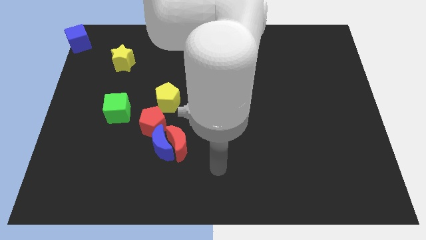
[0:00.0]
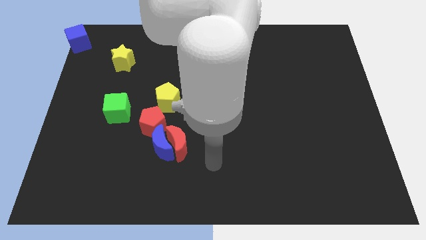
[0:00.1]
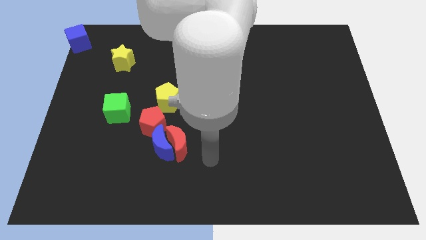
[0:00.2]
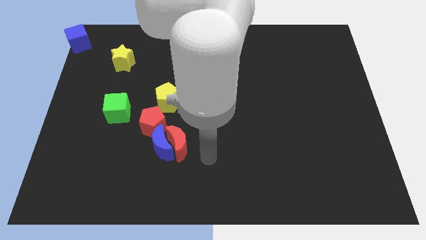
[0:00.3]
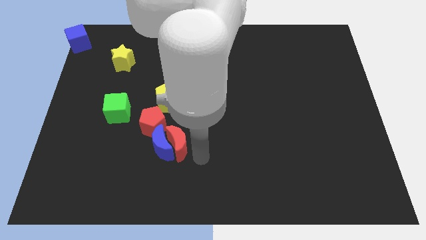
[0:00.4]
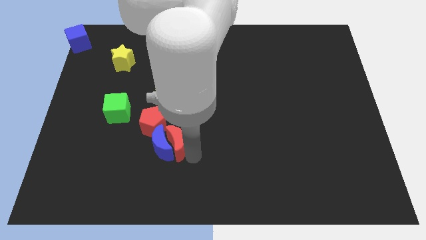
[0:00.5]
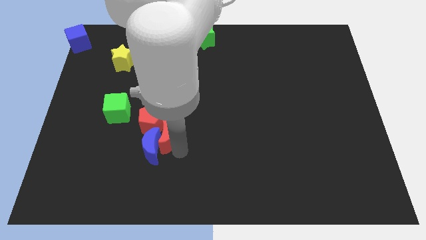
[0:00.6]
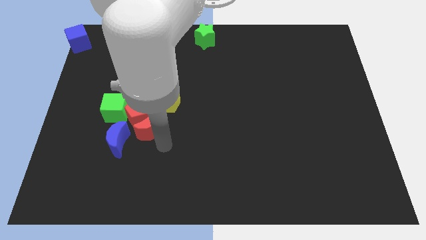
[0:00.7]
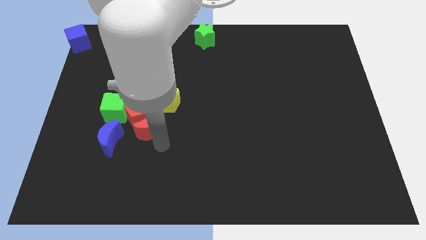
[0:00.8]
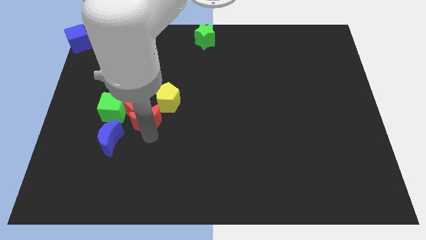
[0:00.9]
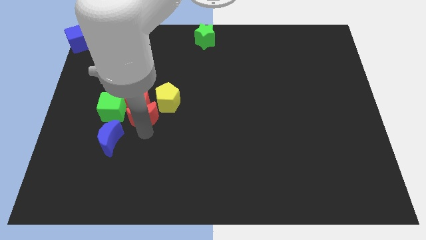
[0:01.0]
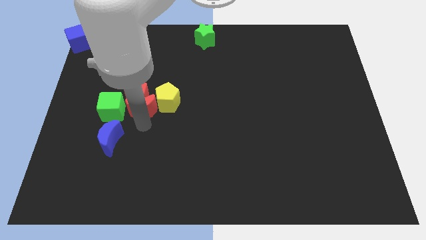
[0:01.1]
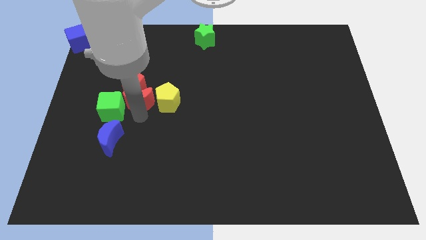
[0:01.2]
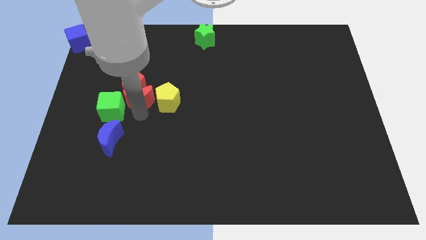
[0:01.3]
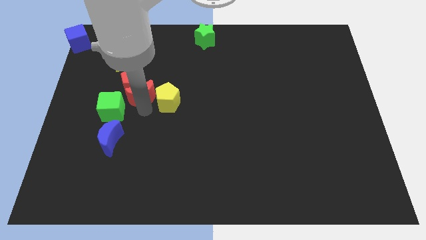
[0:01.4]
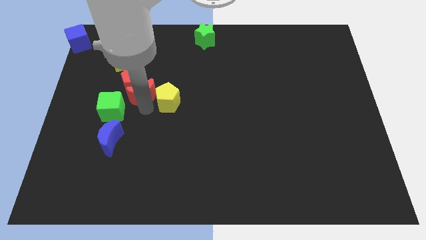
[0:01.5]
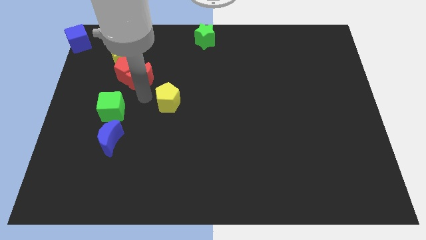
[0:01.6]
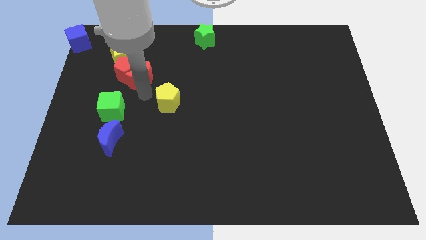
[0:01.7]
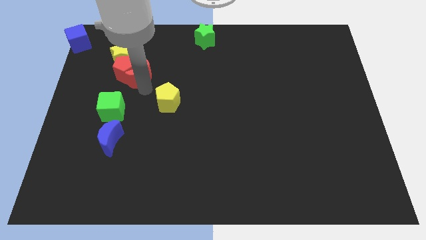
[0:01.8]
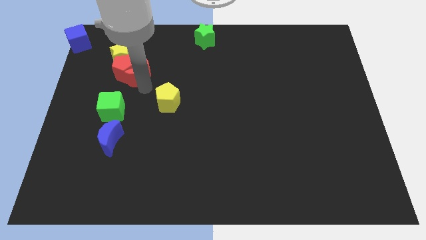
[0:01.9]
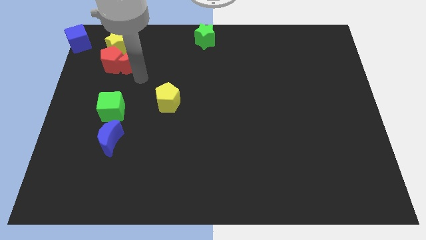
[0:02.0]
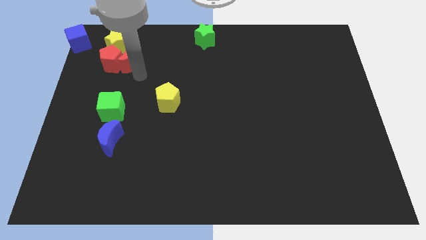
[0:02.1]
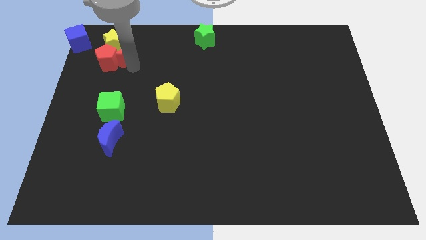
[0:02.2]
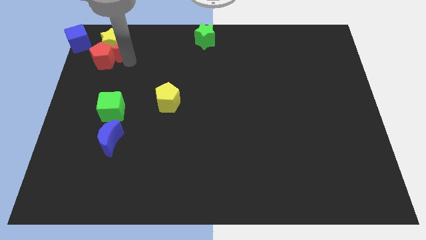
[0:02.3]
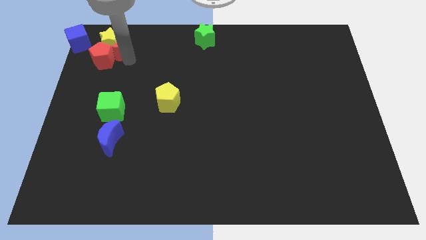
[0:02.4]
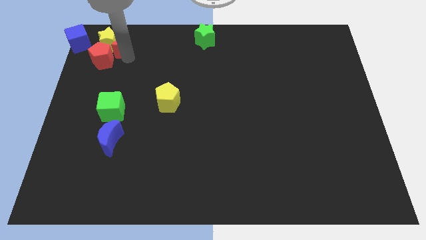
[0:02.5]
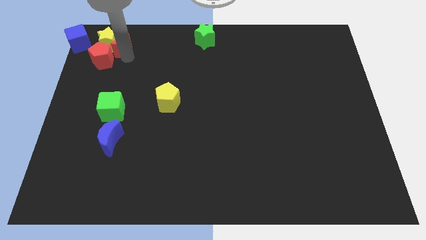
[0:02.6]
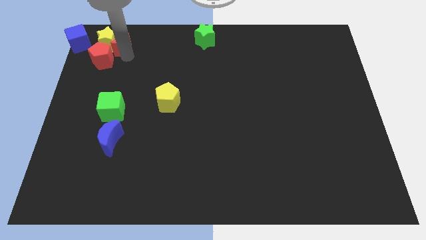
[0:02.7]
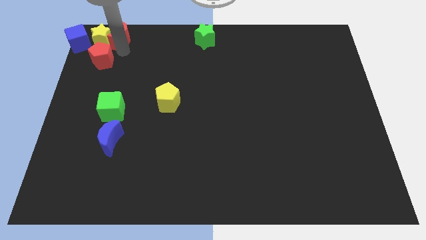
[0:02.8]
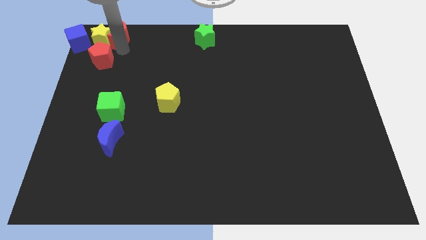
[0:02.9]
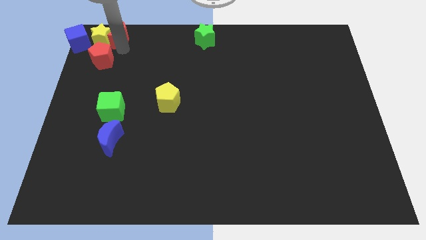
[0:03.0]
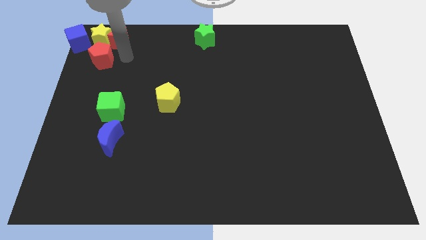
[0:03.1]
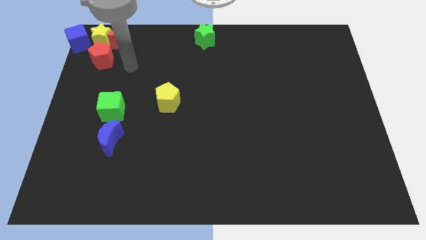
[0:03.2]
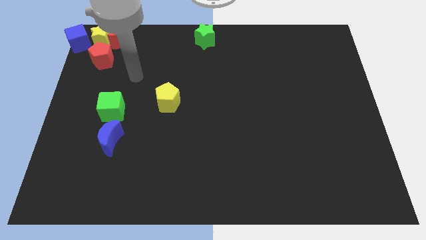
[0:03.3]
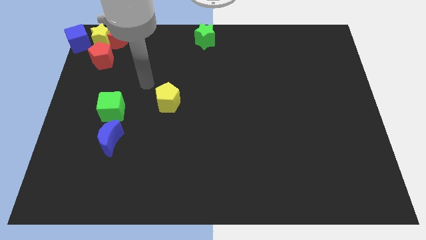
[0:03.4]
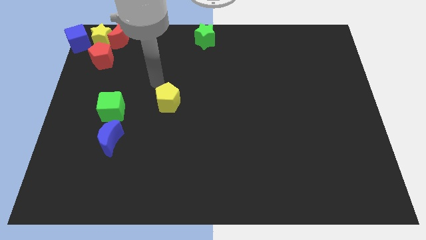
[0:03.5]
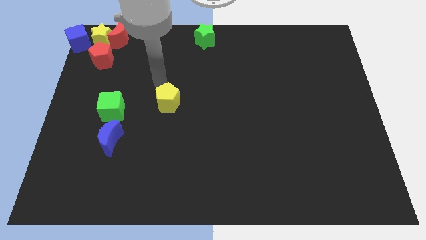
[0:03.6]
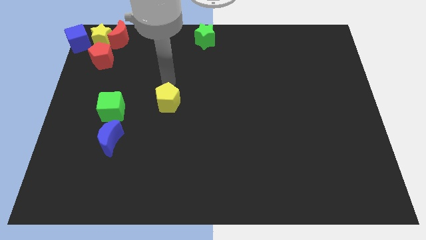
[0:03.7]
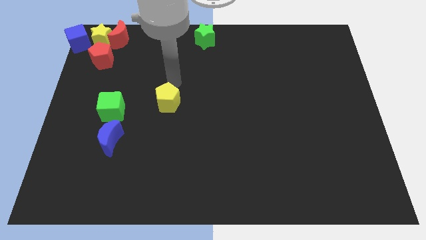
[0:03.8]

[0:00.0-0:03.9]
push the group of blocks close to the right of blue cube

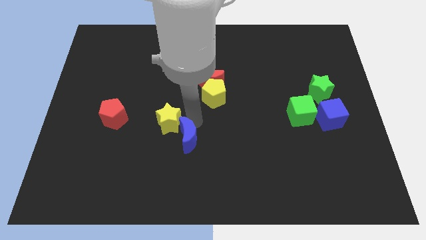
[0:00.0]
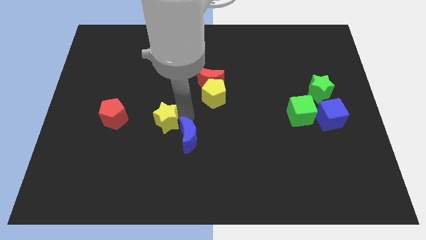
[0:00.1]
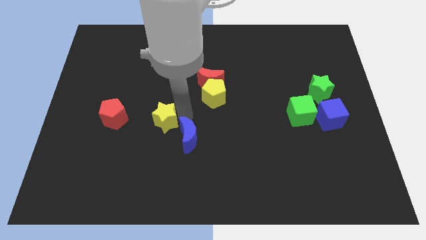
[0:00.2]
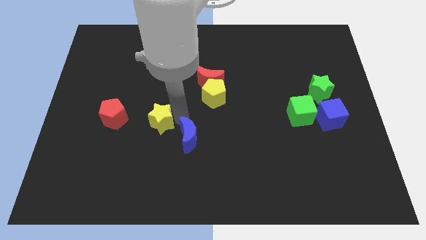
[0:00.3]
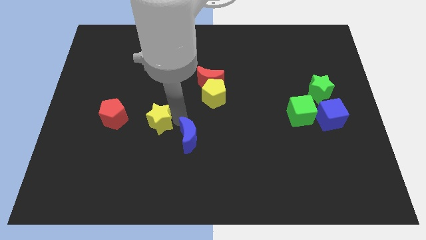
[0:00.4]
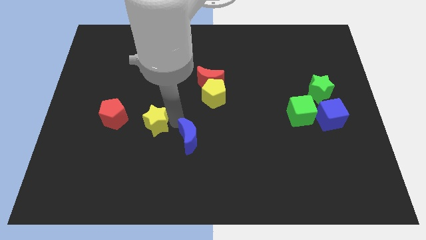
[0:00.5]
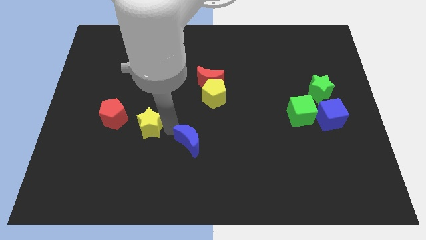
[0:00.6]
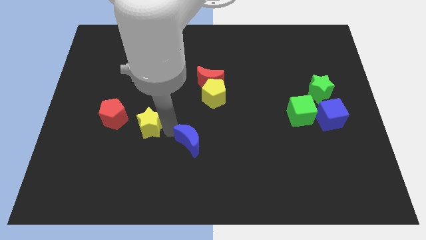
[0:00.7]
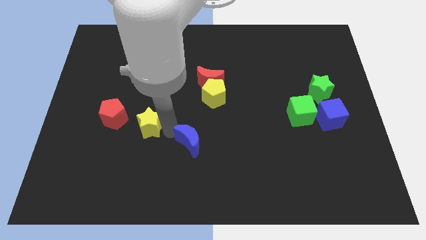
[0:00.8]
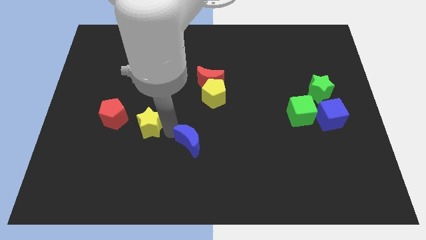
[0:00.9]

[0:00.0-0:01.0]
move the yellow star slightly away from the blue crescent

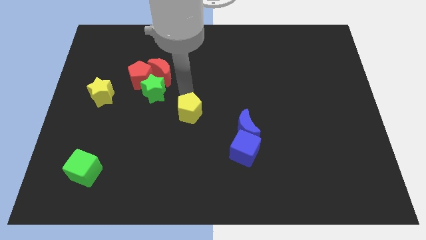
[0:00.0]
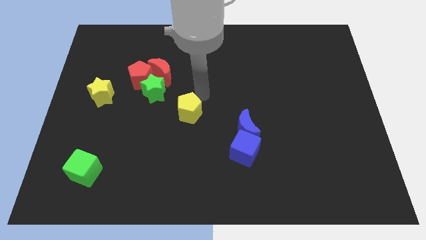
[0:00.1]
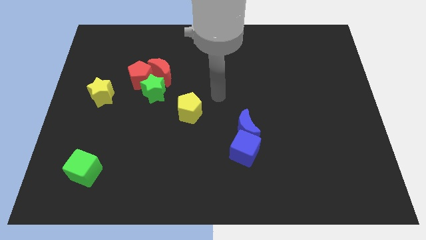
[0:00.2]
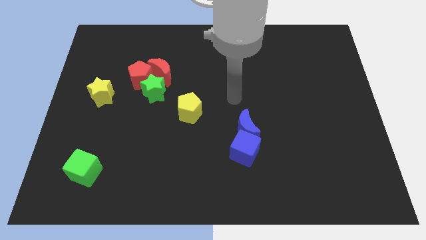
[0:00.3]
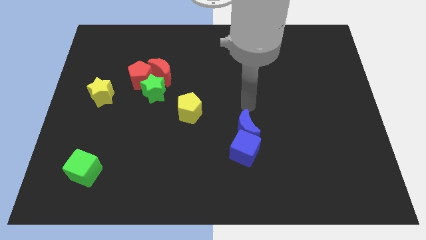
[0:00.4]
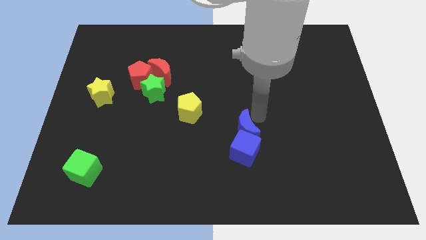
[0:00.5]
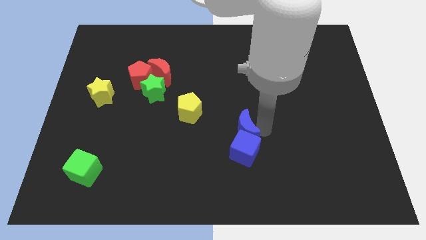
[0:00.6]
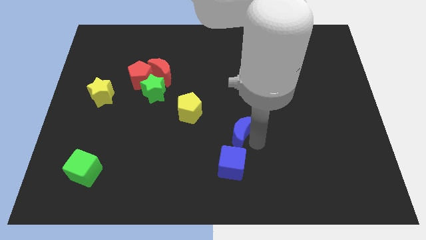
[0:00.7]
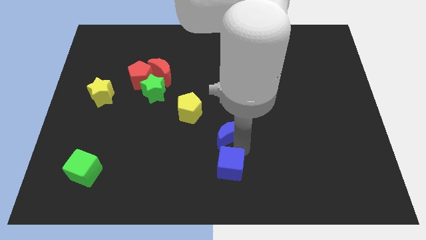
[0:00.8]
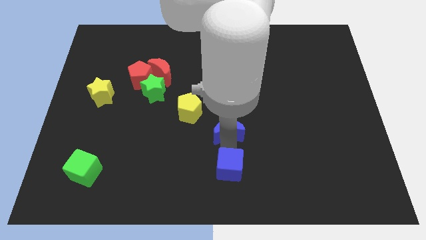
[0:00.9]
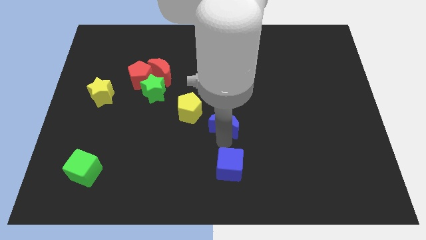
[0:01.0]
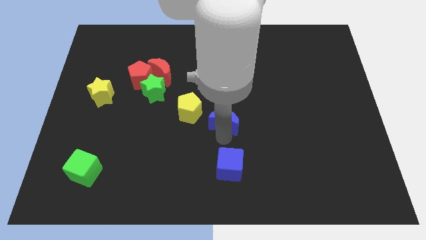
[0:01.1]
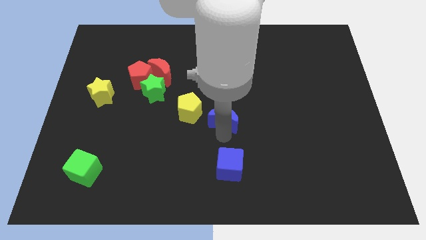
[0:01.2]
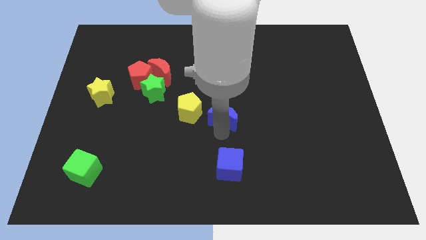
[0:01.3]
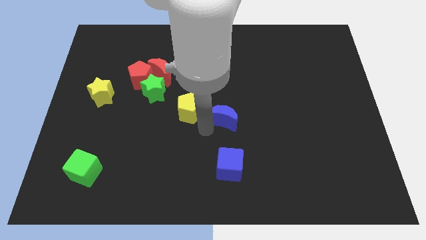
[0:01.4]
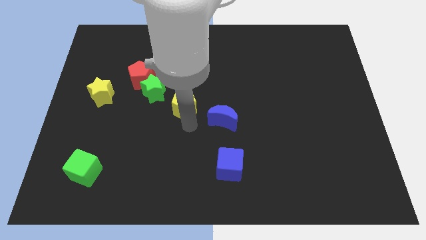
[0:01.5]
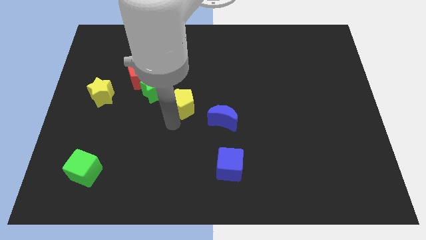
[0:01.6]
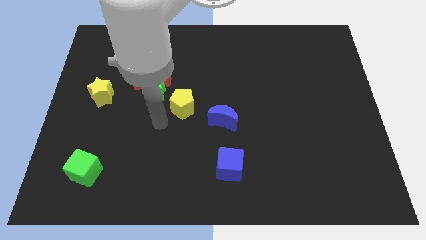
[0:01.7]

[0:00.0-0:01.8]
separate the blue crescent from blue cube

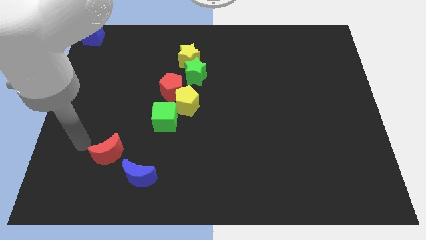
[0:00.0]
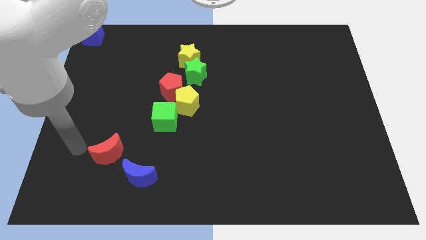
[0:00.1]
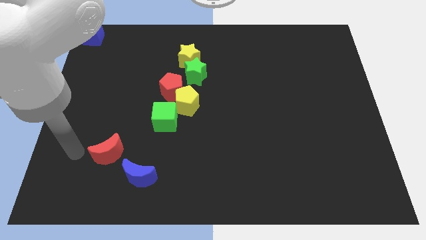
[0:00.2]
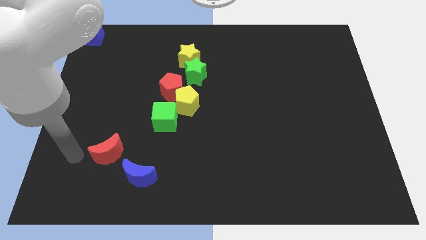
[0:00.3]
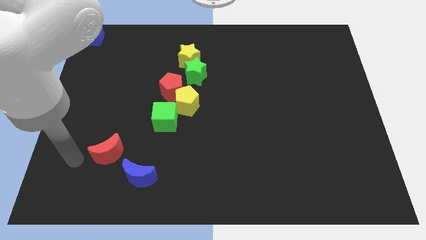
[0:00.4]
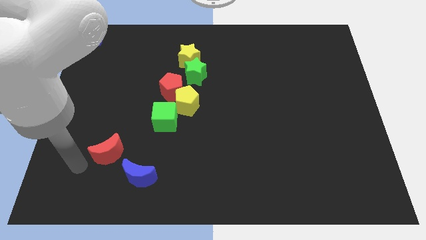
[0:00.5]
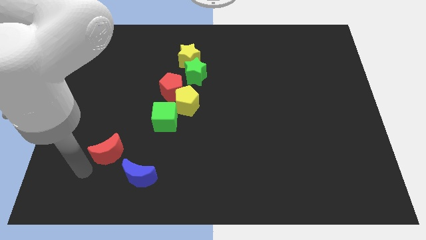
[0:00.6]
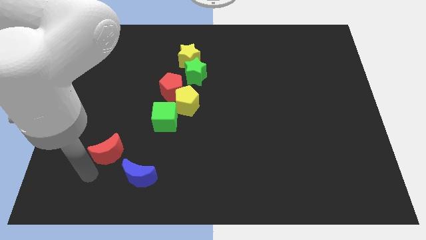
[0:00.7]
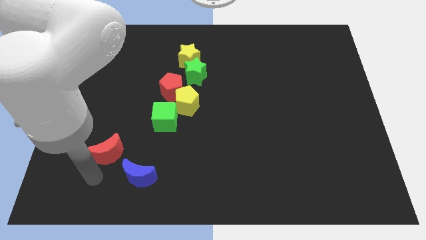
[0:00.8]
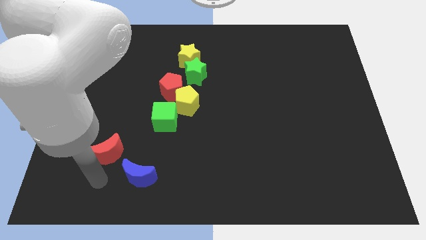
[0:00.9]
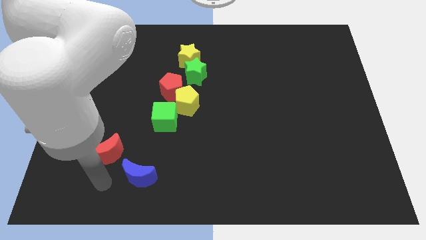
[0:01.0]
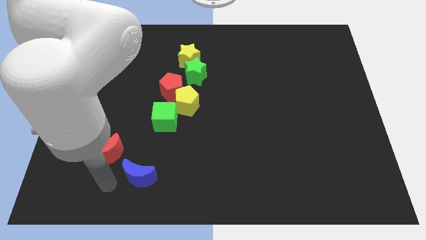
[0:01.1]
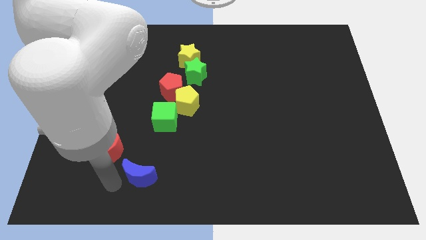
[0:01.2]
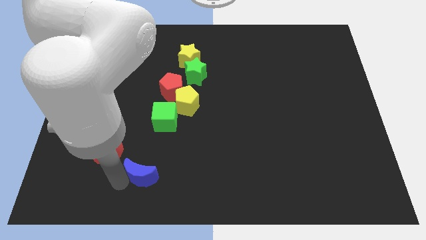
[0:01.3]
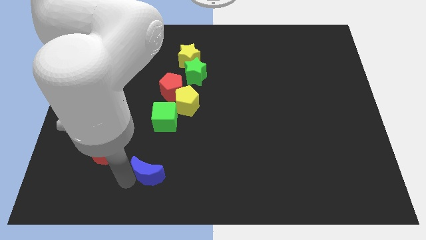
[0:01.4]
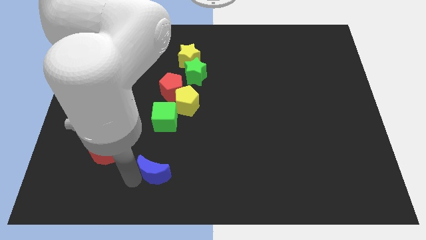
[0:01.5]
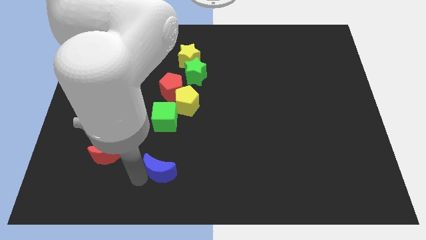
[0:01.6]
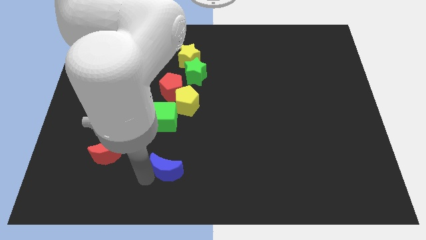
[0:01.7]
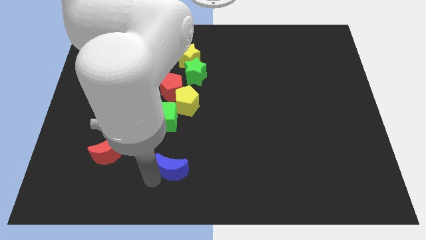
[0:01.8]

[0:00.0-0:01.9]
slightly move the blue moon towards right of the red crescent
